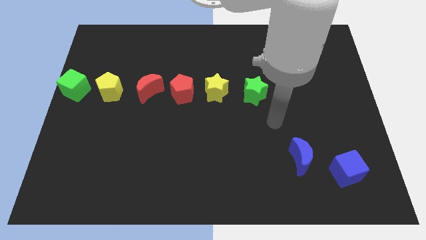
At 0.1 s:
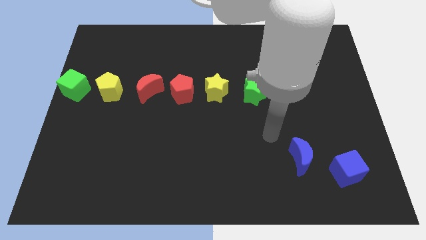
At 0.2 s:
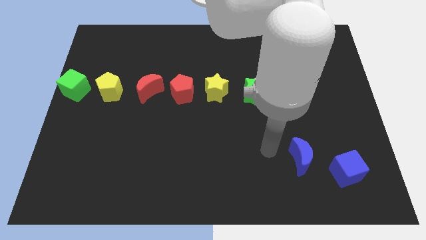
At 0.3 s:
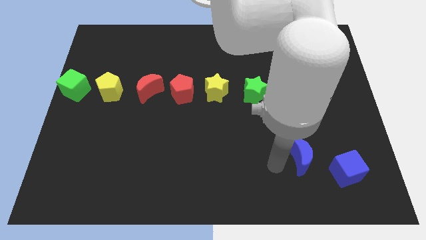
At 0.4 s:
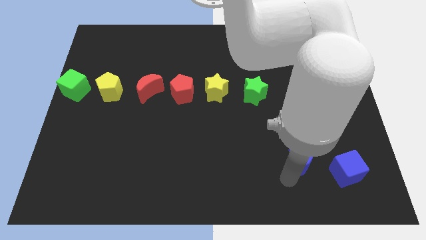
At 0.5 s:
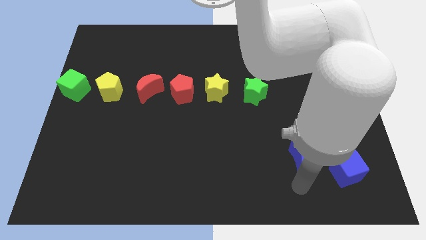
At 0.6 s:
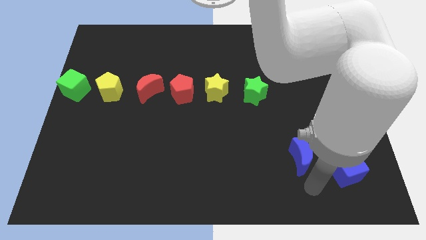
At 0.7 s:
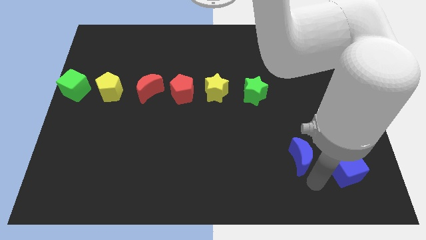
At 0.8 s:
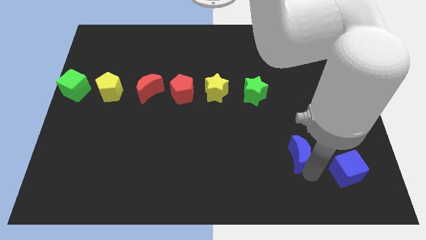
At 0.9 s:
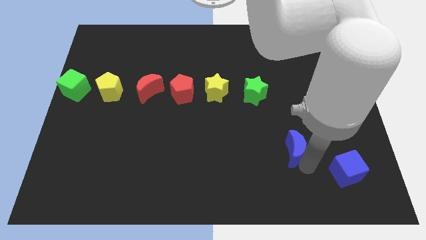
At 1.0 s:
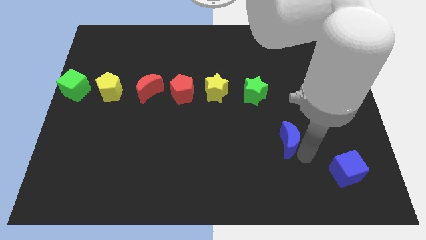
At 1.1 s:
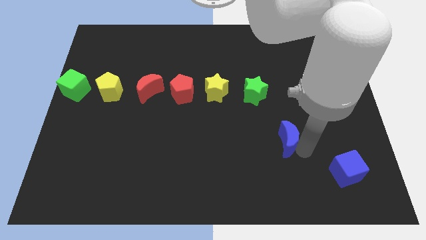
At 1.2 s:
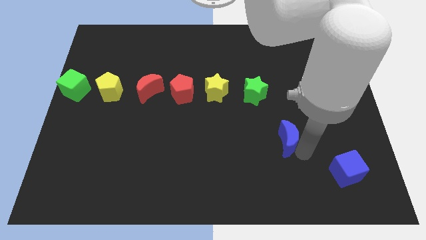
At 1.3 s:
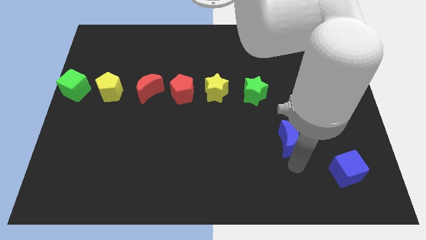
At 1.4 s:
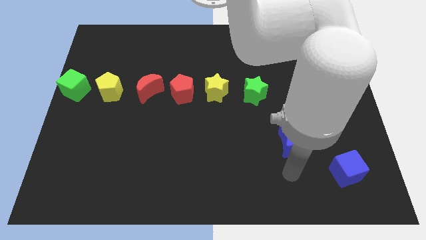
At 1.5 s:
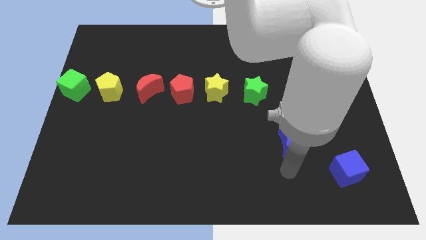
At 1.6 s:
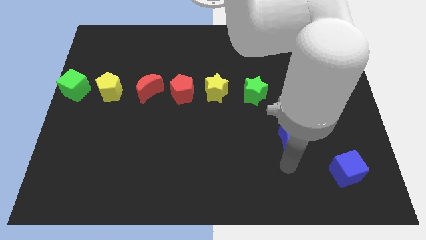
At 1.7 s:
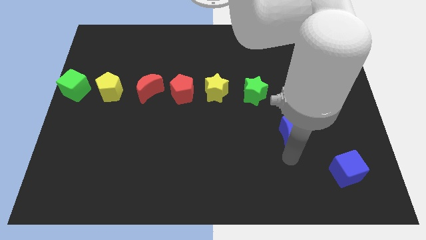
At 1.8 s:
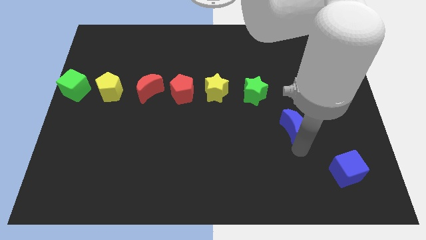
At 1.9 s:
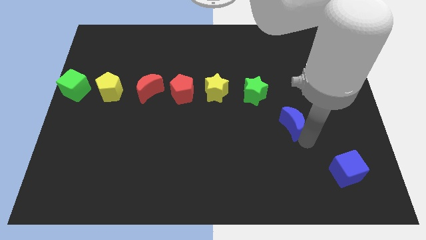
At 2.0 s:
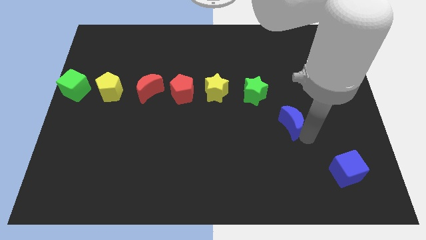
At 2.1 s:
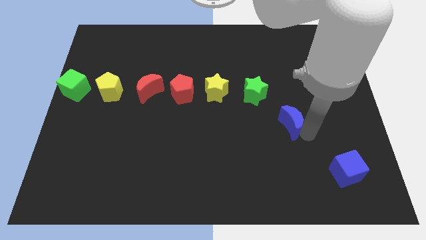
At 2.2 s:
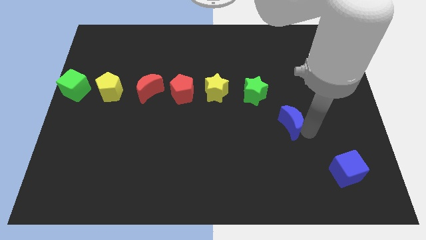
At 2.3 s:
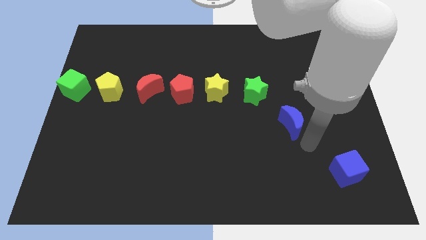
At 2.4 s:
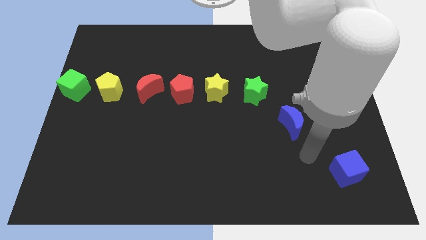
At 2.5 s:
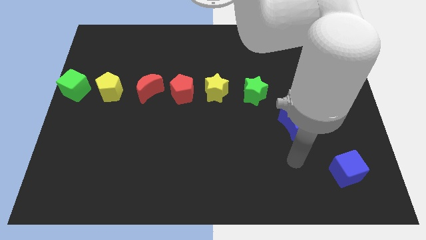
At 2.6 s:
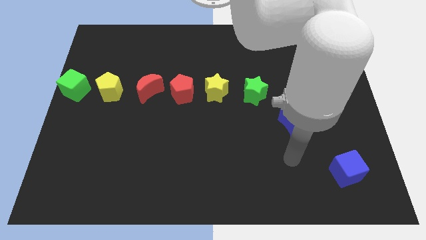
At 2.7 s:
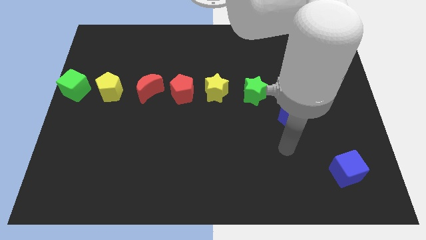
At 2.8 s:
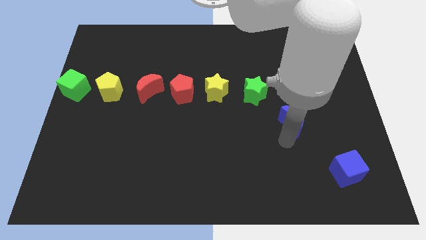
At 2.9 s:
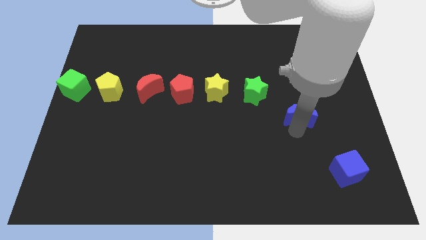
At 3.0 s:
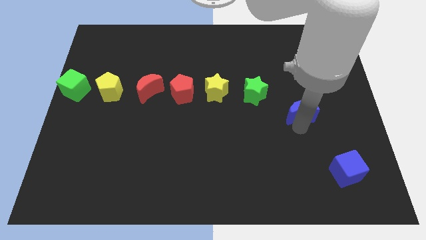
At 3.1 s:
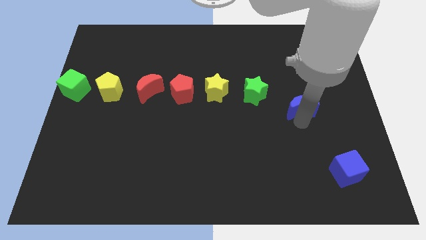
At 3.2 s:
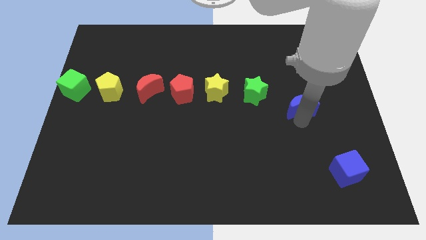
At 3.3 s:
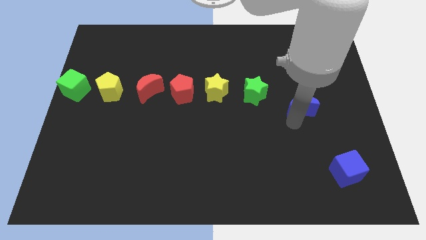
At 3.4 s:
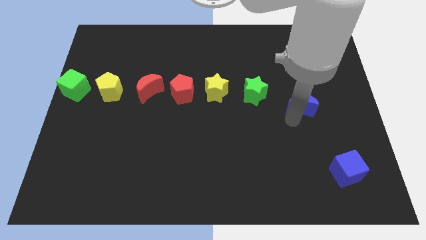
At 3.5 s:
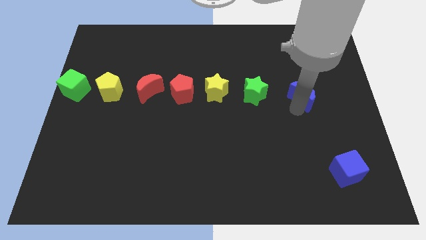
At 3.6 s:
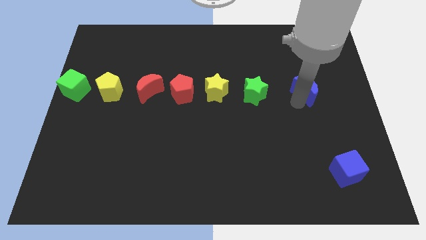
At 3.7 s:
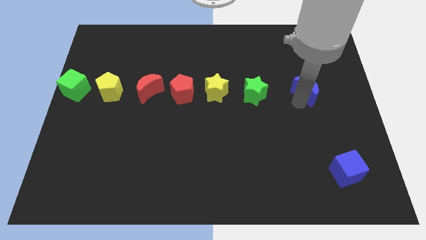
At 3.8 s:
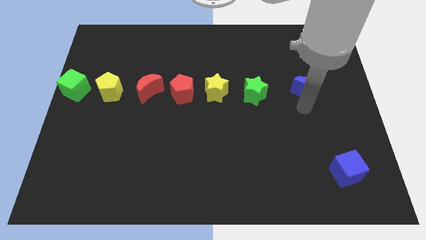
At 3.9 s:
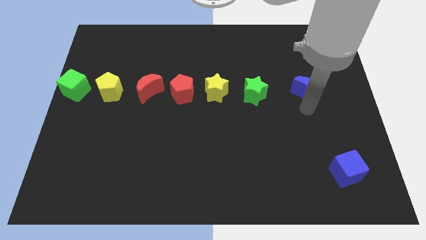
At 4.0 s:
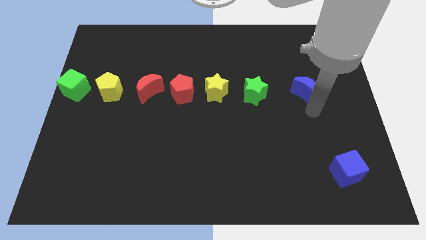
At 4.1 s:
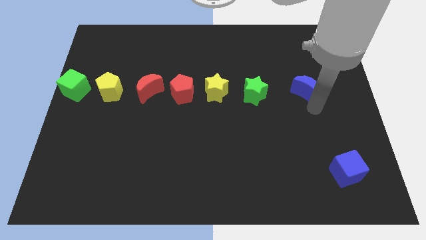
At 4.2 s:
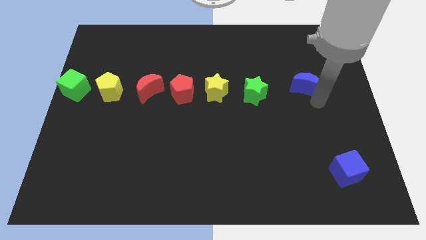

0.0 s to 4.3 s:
place blue crescent right to the green star

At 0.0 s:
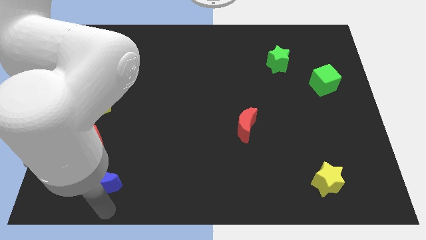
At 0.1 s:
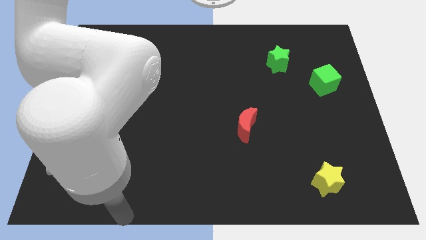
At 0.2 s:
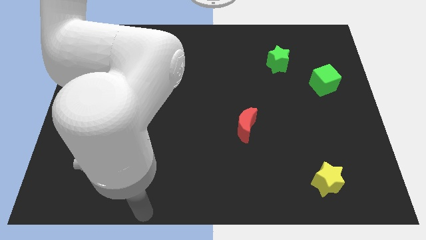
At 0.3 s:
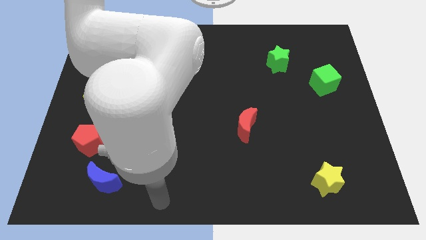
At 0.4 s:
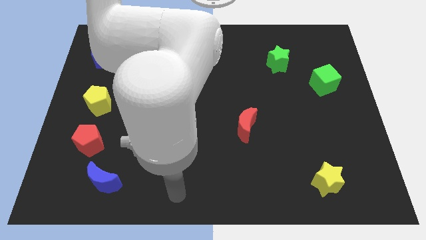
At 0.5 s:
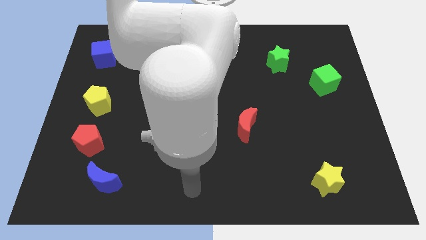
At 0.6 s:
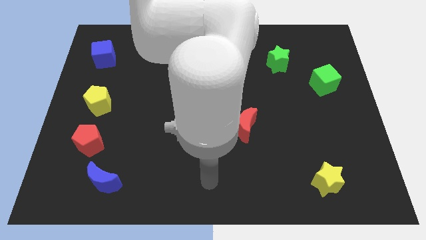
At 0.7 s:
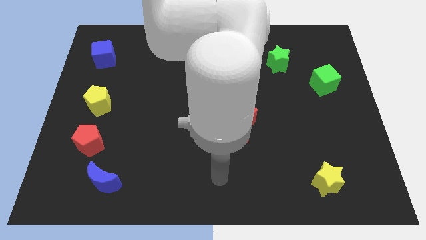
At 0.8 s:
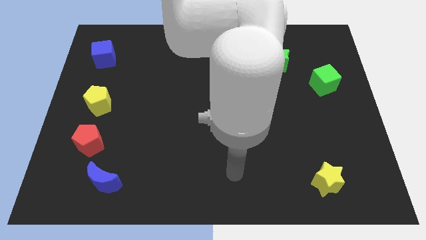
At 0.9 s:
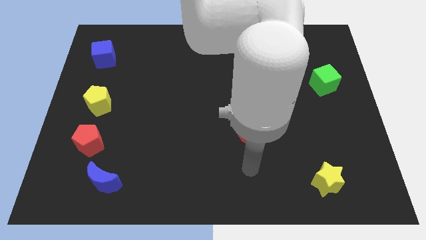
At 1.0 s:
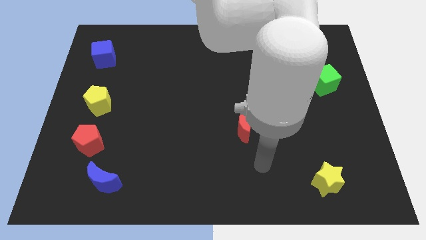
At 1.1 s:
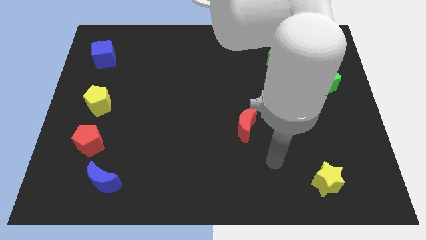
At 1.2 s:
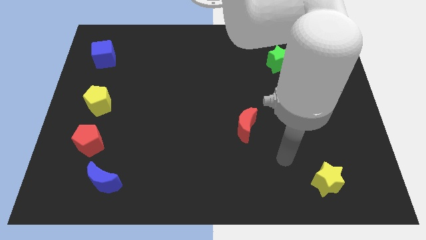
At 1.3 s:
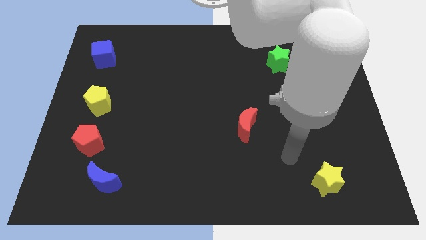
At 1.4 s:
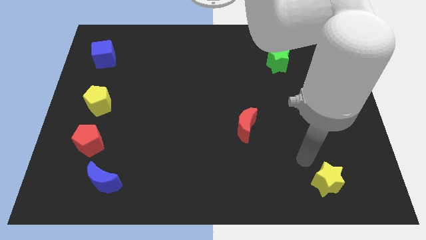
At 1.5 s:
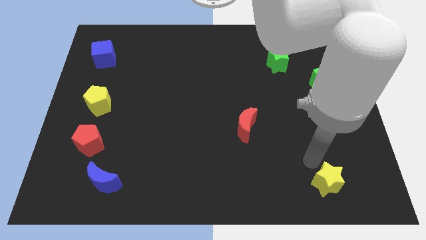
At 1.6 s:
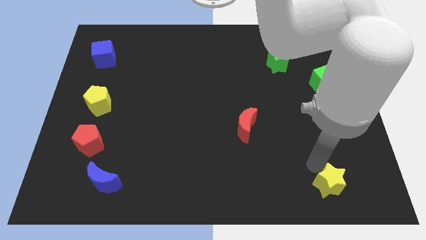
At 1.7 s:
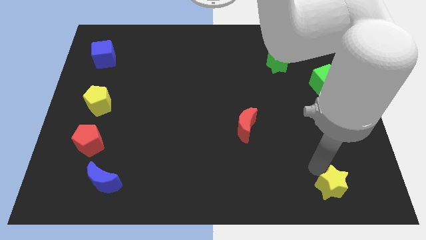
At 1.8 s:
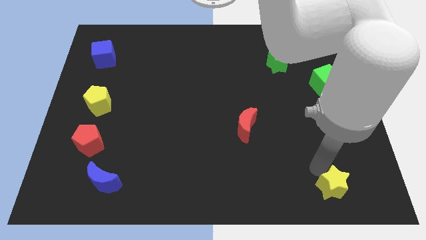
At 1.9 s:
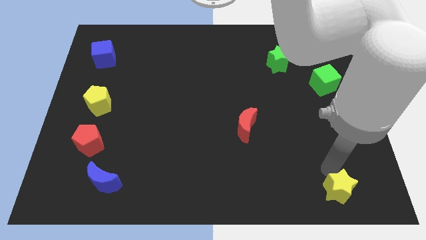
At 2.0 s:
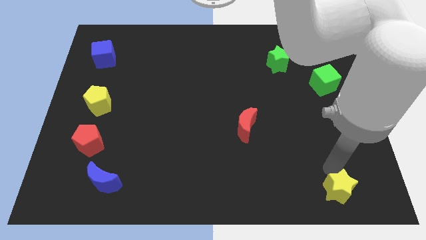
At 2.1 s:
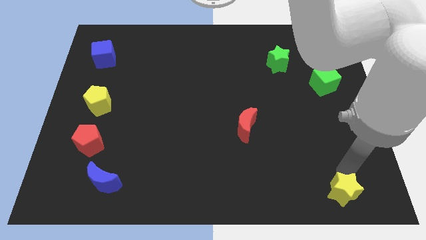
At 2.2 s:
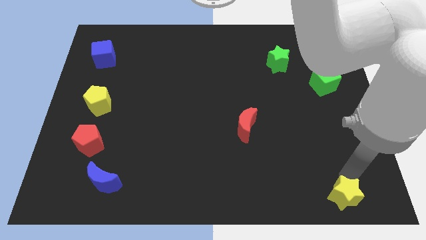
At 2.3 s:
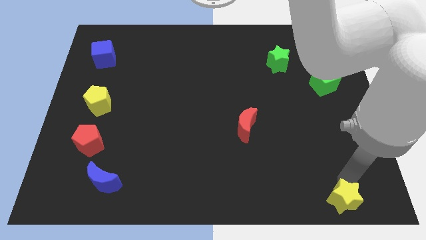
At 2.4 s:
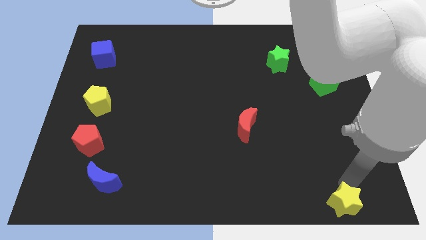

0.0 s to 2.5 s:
place the yellow star to the bottom of the board

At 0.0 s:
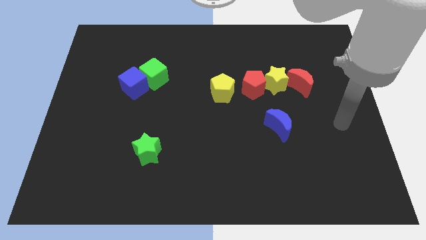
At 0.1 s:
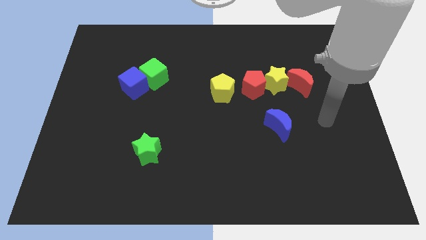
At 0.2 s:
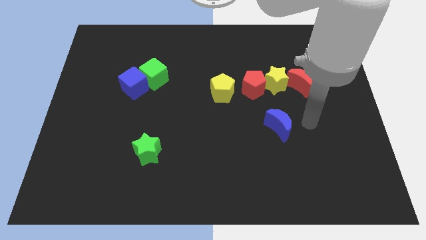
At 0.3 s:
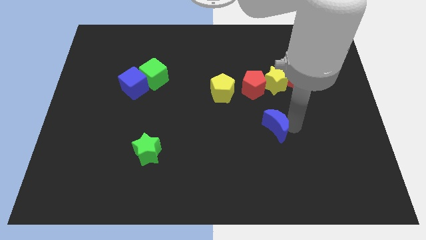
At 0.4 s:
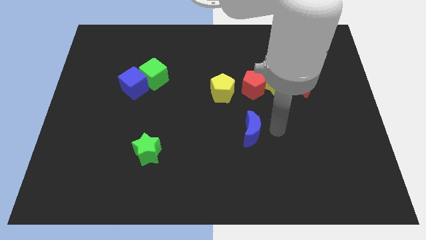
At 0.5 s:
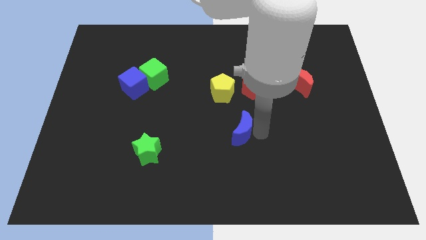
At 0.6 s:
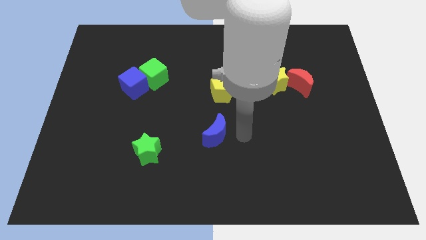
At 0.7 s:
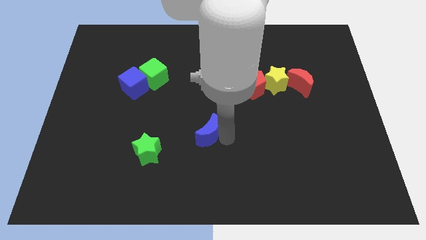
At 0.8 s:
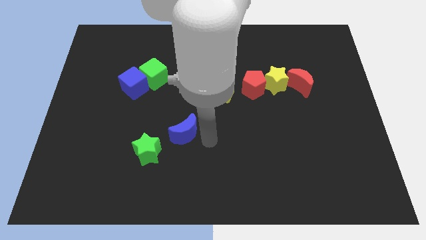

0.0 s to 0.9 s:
move the blue crescent to the left

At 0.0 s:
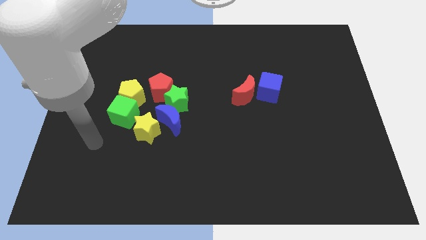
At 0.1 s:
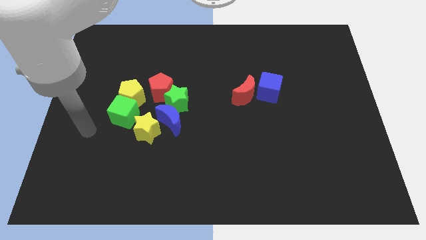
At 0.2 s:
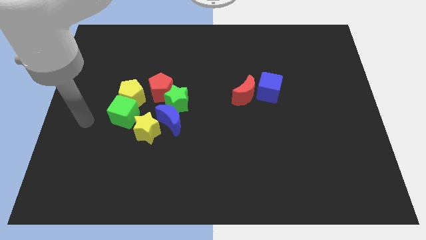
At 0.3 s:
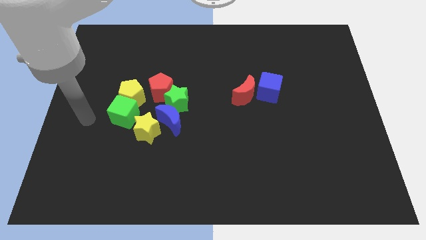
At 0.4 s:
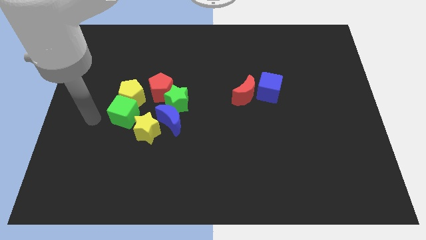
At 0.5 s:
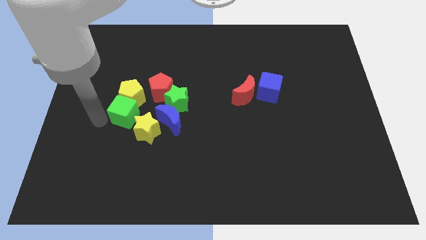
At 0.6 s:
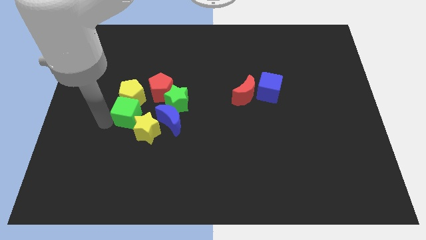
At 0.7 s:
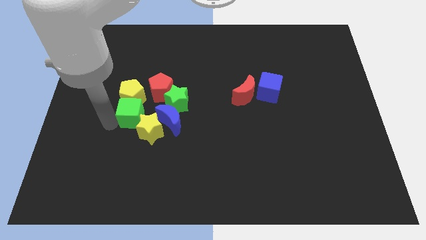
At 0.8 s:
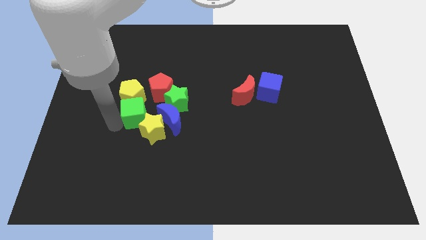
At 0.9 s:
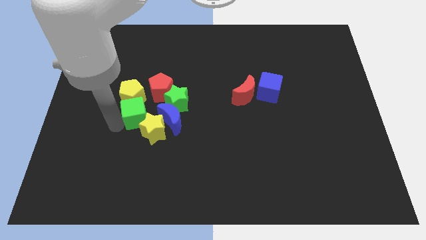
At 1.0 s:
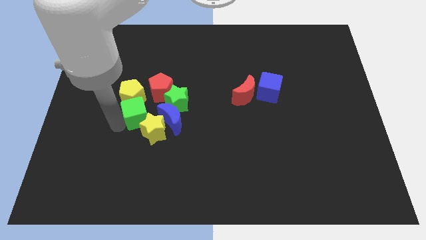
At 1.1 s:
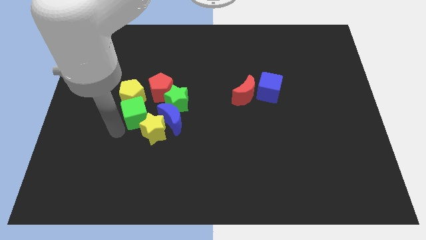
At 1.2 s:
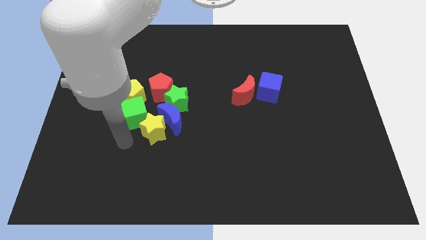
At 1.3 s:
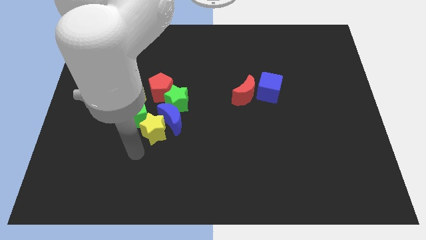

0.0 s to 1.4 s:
slightly move the green cube into yellow blocks
